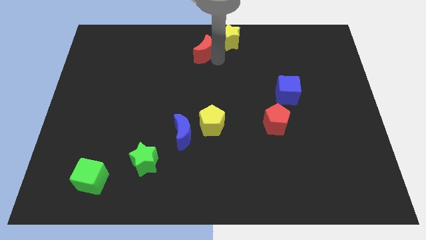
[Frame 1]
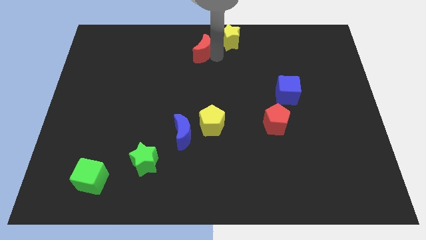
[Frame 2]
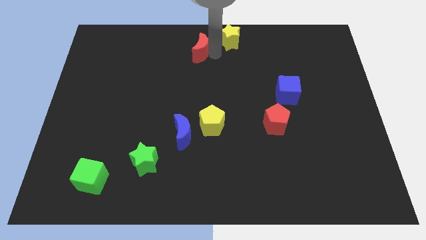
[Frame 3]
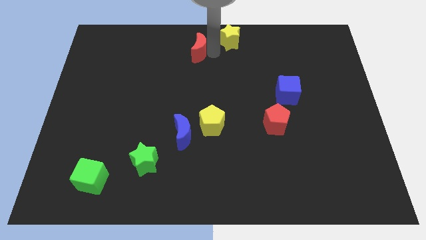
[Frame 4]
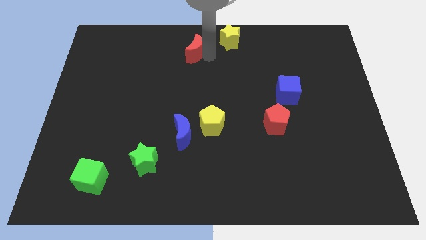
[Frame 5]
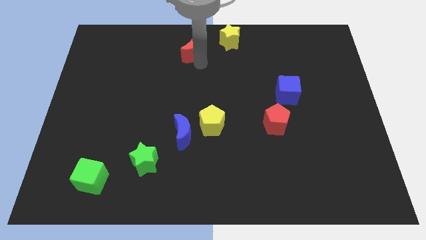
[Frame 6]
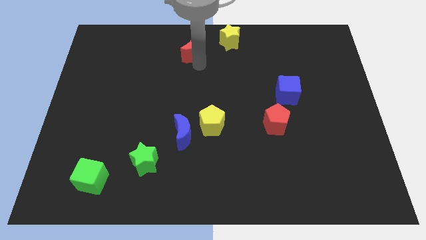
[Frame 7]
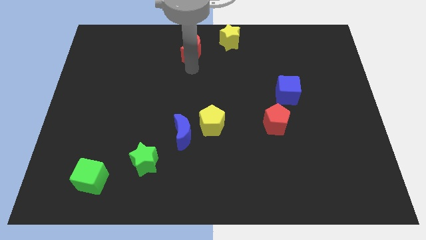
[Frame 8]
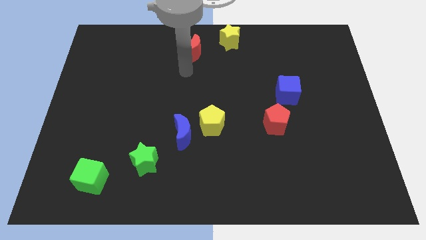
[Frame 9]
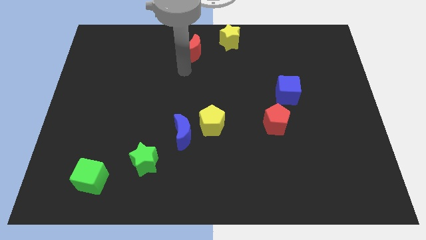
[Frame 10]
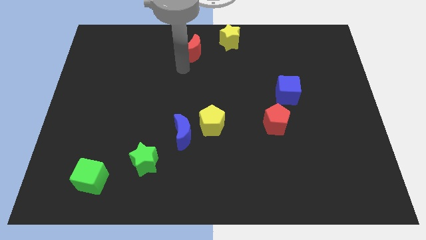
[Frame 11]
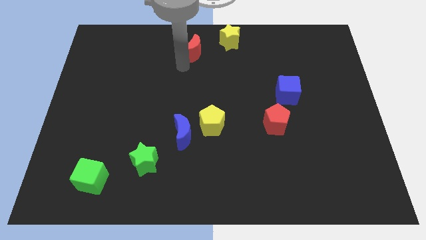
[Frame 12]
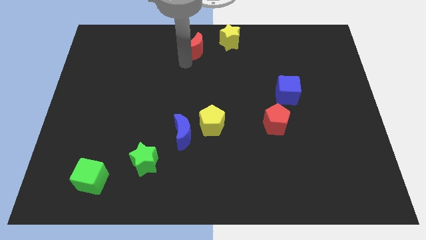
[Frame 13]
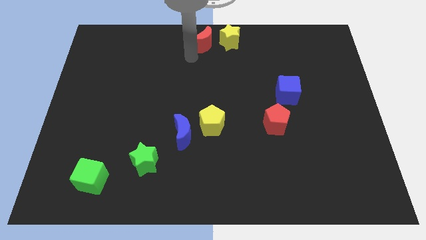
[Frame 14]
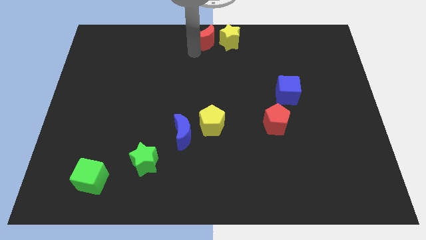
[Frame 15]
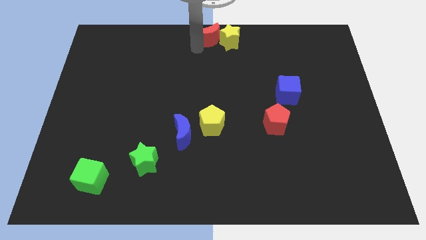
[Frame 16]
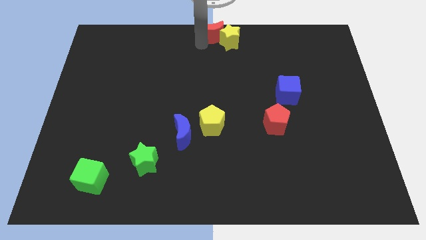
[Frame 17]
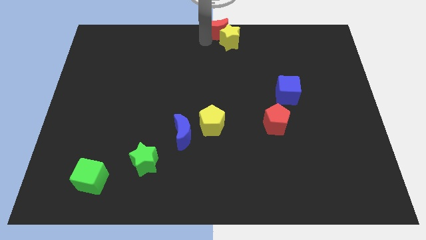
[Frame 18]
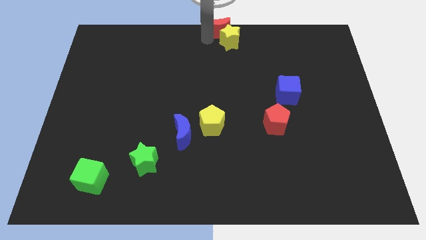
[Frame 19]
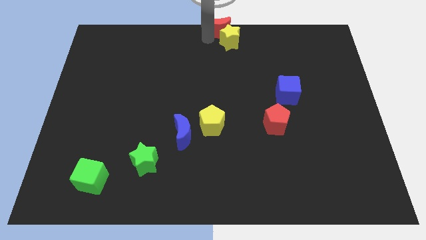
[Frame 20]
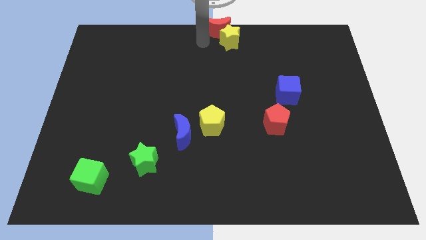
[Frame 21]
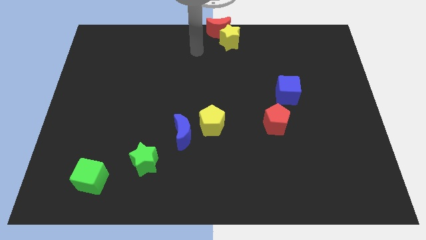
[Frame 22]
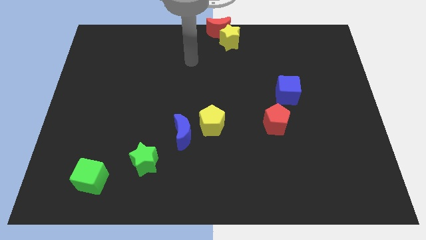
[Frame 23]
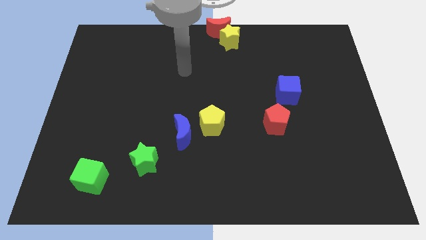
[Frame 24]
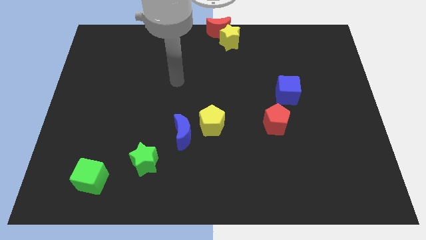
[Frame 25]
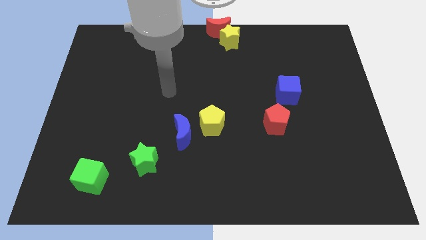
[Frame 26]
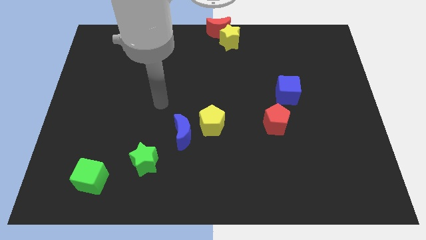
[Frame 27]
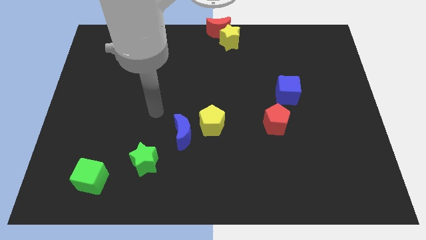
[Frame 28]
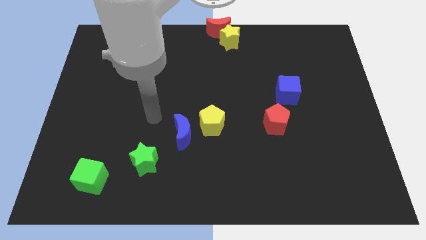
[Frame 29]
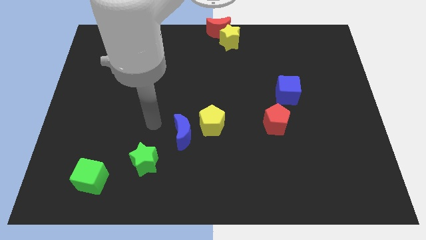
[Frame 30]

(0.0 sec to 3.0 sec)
place red crescent at center top

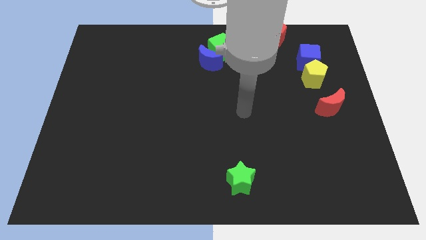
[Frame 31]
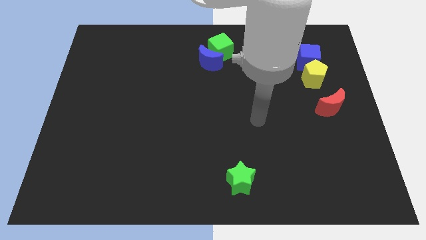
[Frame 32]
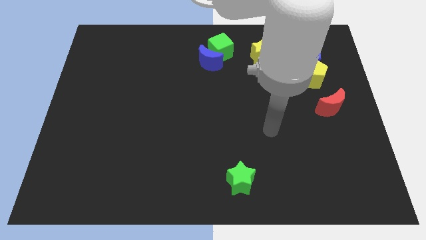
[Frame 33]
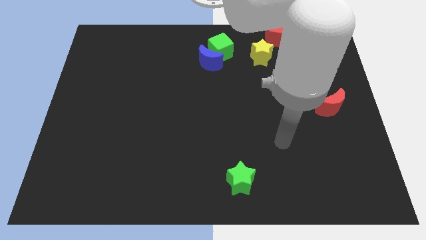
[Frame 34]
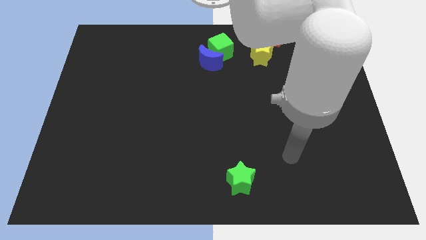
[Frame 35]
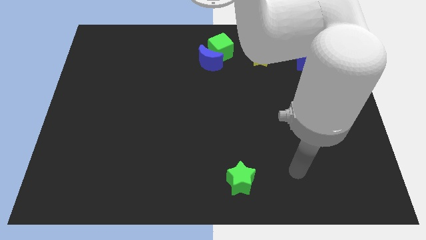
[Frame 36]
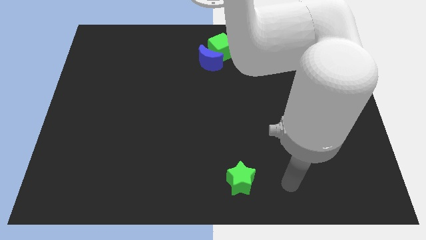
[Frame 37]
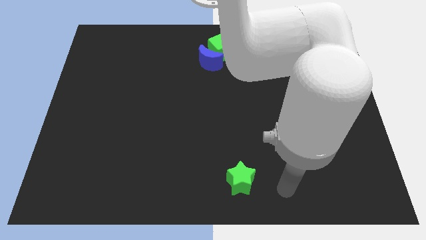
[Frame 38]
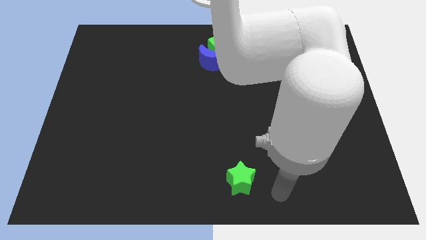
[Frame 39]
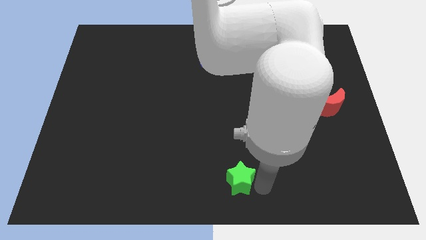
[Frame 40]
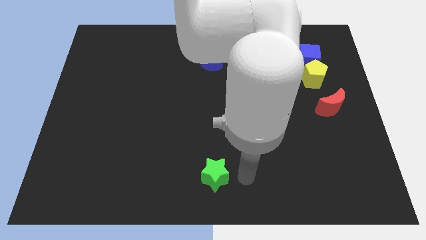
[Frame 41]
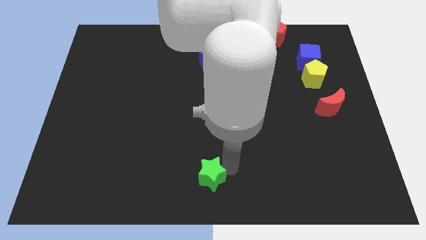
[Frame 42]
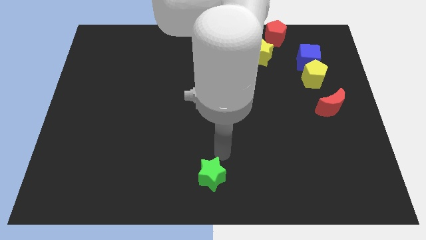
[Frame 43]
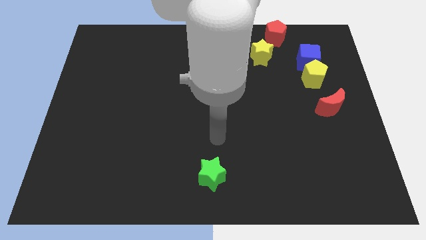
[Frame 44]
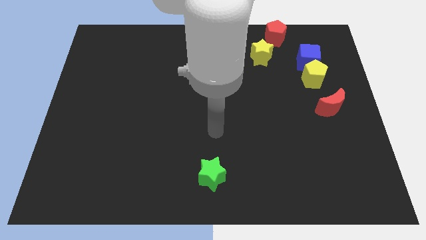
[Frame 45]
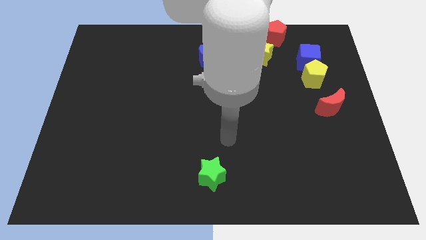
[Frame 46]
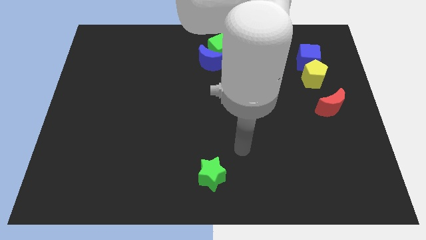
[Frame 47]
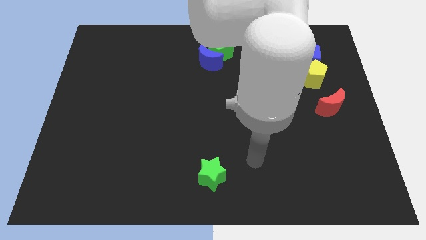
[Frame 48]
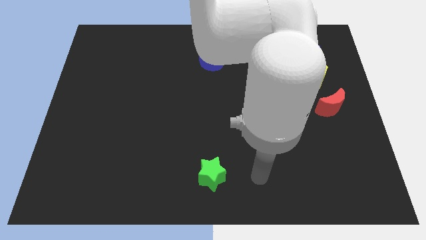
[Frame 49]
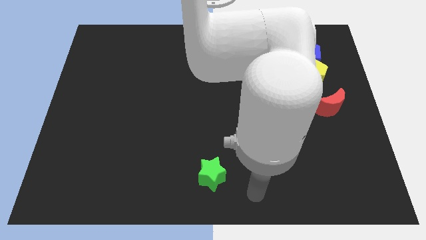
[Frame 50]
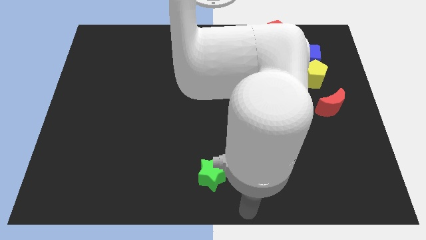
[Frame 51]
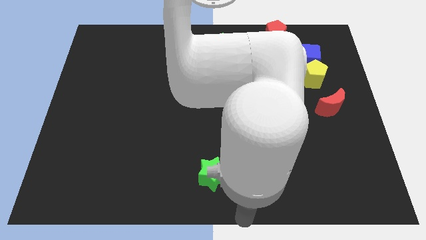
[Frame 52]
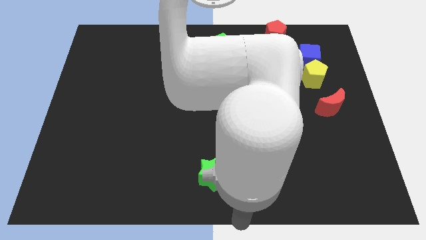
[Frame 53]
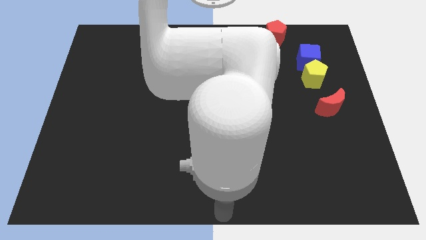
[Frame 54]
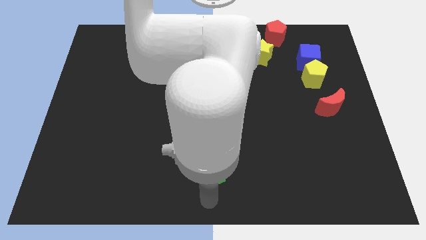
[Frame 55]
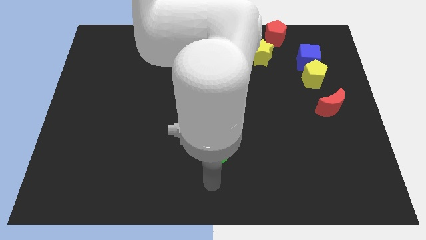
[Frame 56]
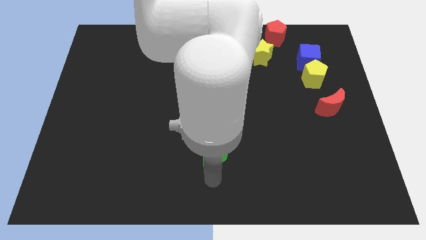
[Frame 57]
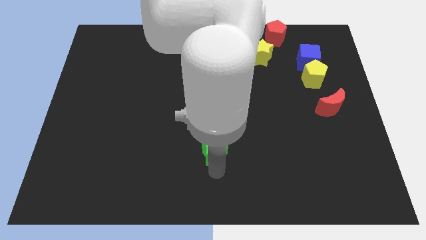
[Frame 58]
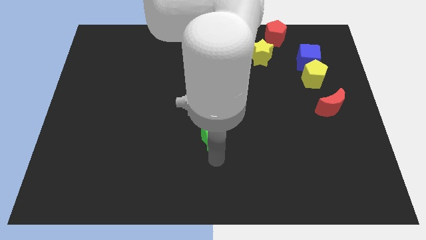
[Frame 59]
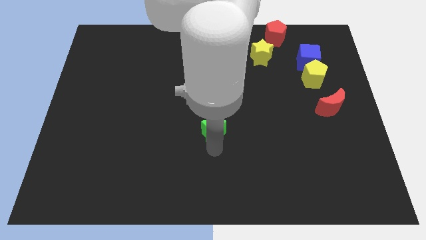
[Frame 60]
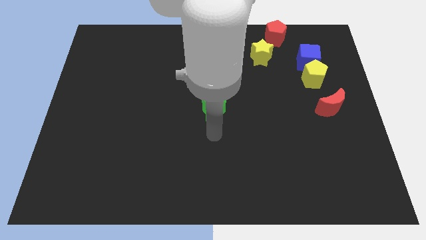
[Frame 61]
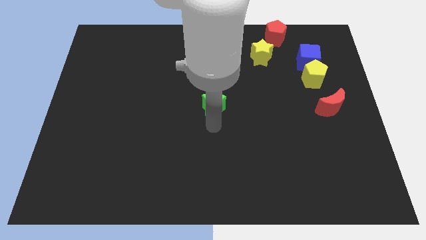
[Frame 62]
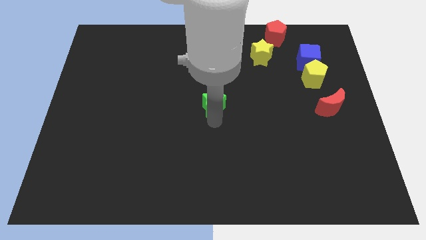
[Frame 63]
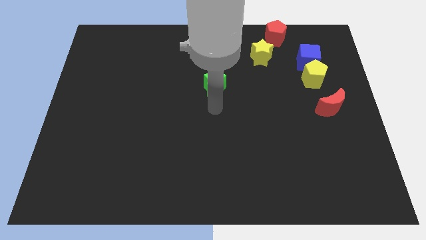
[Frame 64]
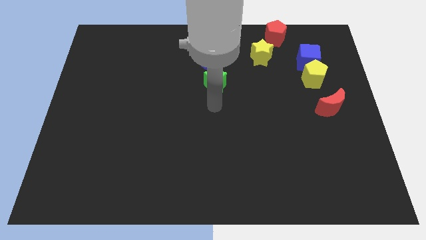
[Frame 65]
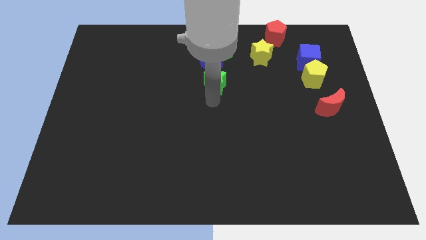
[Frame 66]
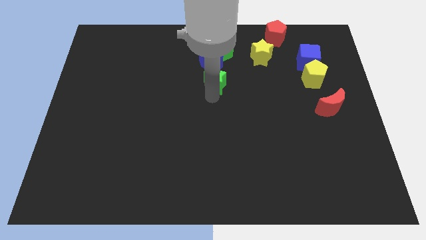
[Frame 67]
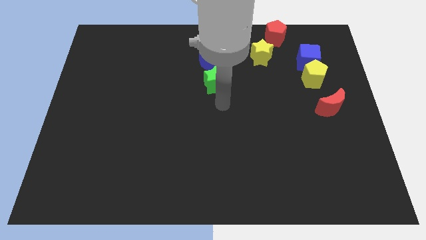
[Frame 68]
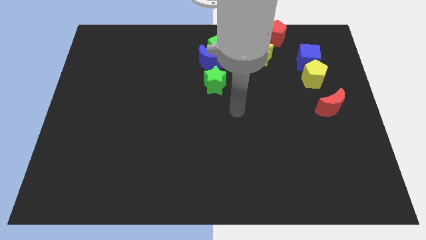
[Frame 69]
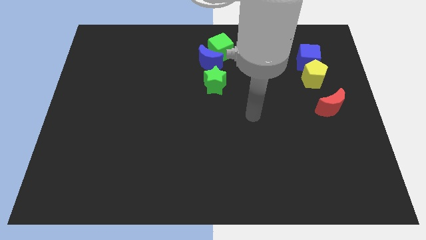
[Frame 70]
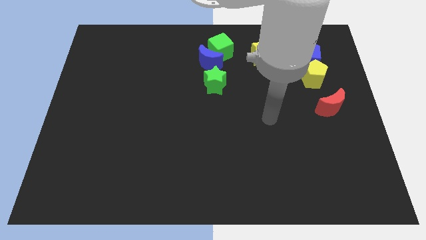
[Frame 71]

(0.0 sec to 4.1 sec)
slide green star below blue moon

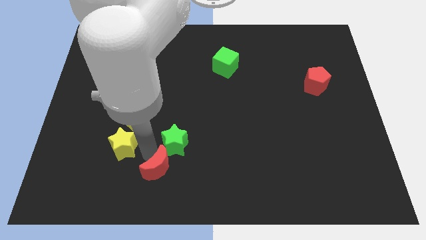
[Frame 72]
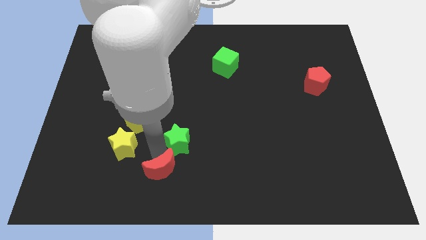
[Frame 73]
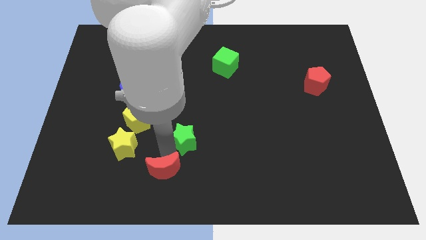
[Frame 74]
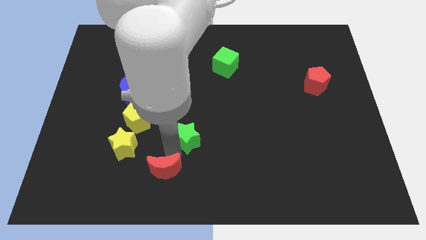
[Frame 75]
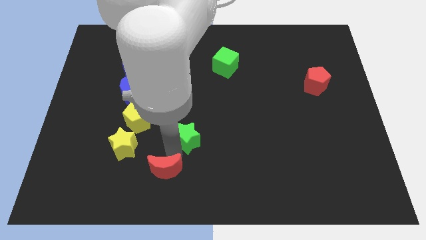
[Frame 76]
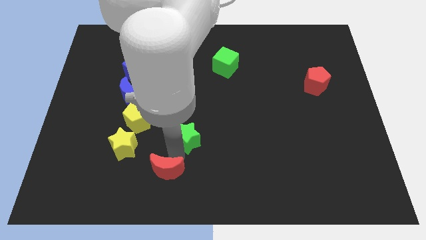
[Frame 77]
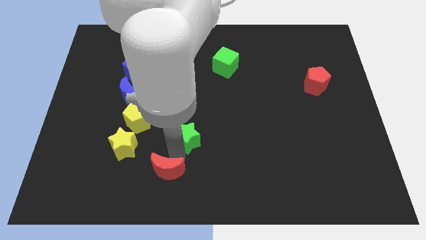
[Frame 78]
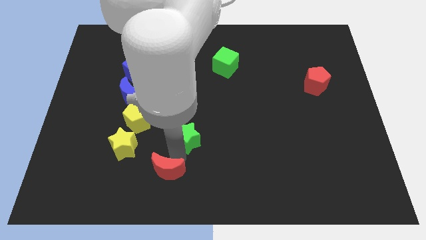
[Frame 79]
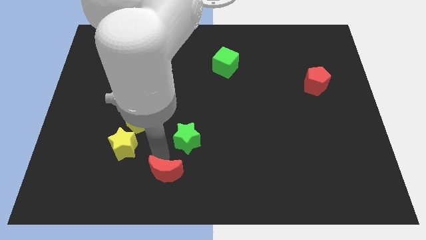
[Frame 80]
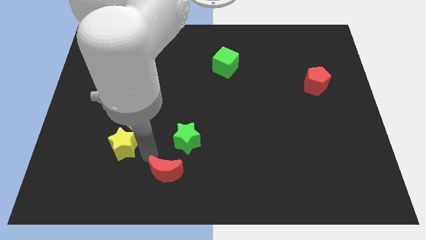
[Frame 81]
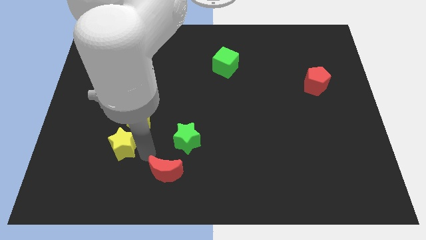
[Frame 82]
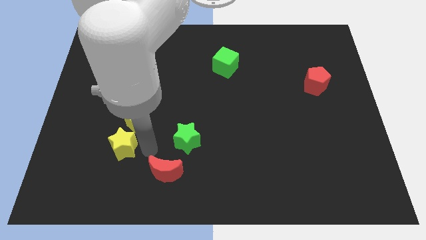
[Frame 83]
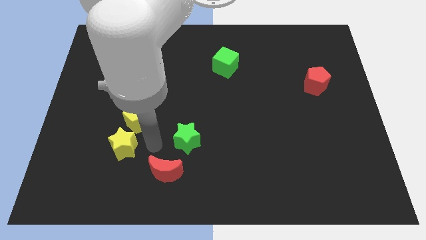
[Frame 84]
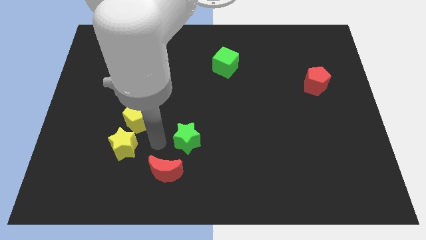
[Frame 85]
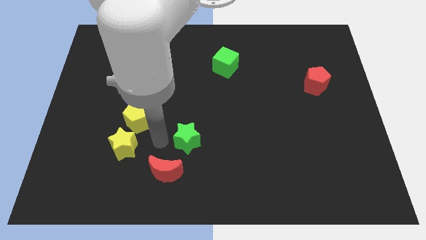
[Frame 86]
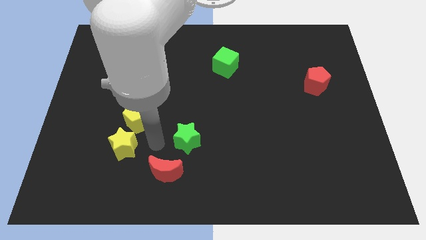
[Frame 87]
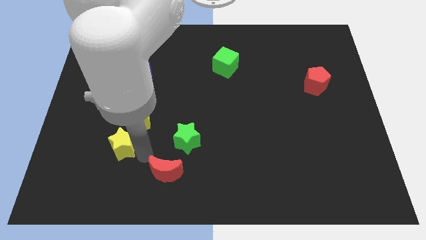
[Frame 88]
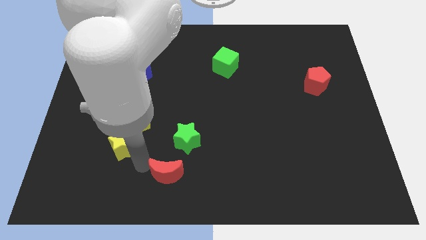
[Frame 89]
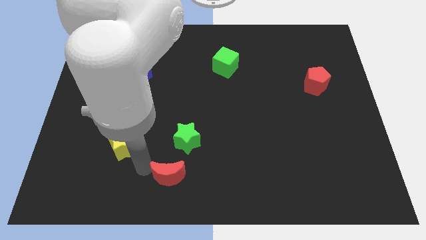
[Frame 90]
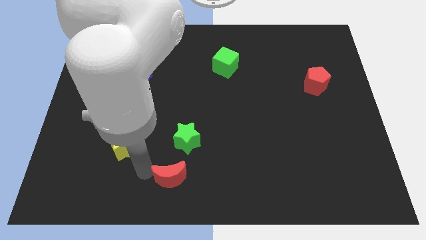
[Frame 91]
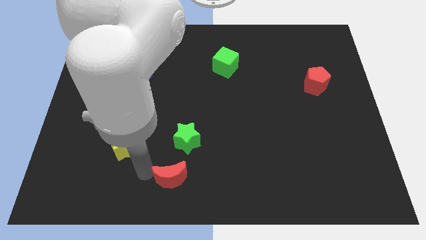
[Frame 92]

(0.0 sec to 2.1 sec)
push the red crescent below the green star
